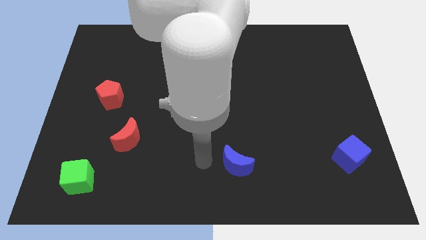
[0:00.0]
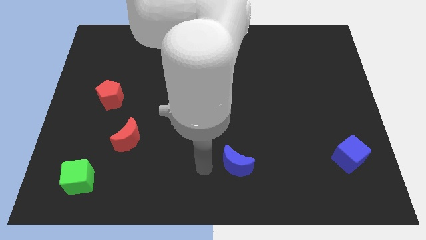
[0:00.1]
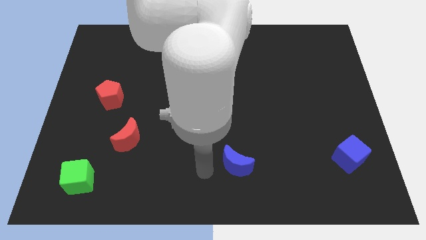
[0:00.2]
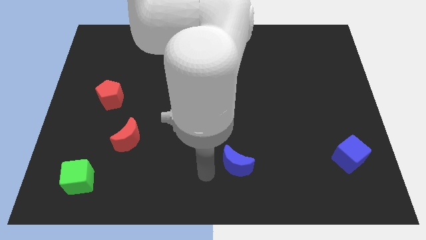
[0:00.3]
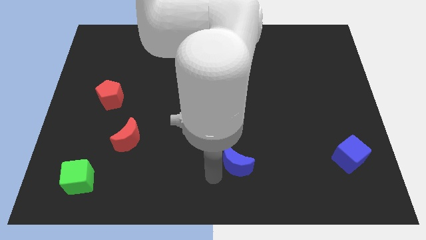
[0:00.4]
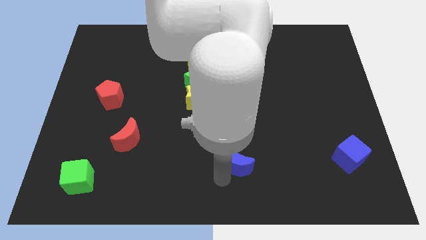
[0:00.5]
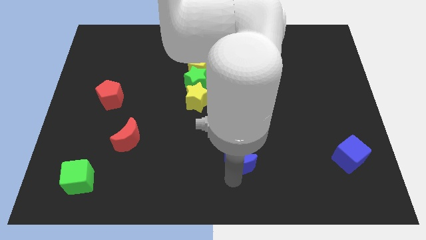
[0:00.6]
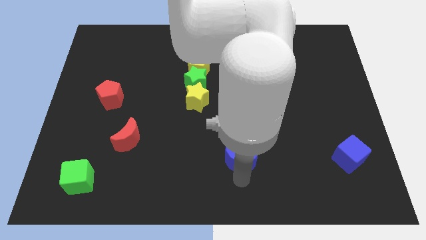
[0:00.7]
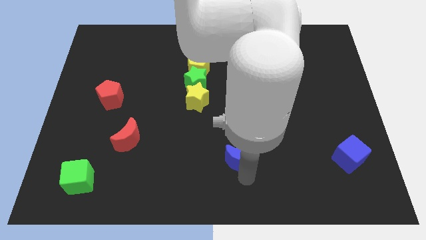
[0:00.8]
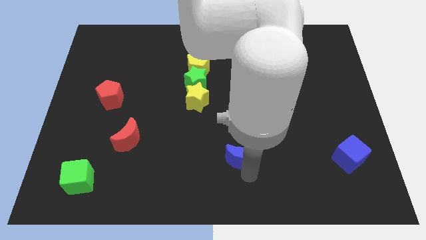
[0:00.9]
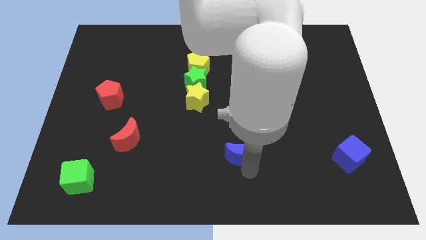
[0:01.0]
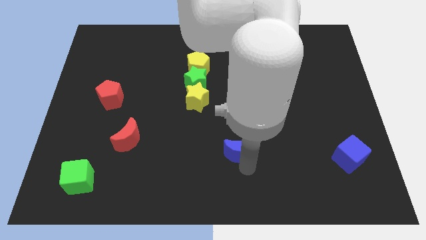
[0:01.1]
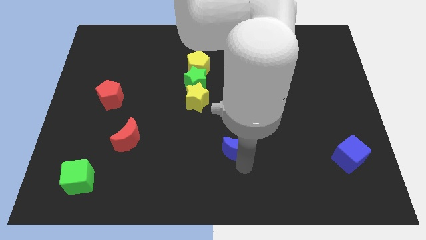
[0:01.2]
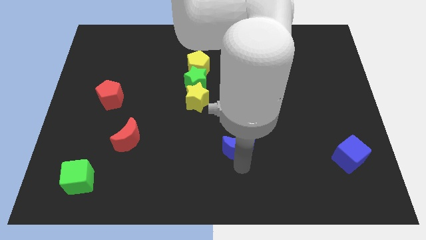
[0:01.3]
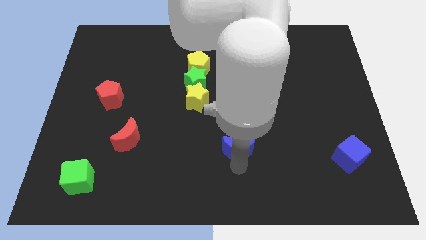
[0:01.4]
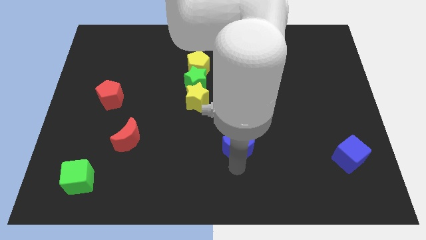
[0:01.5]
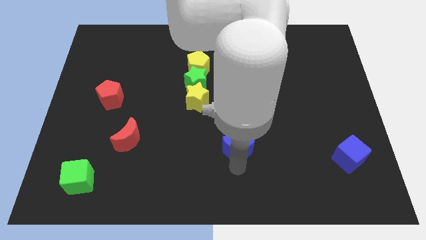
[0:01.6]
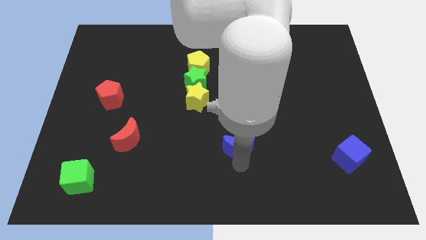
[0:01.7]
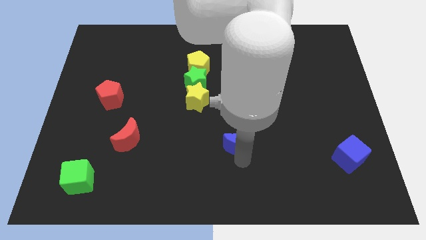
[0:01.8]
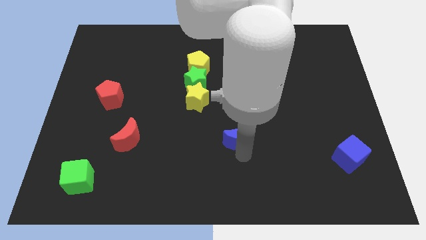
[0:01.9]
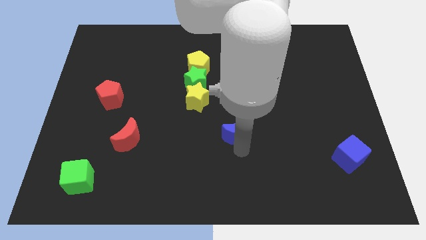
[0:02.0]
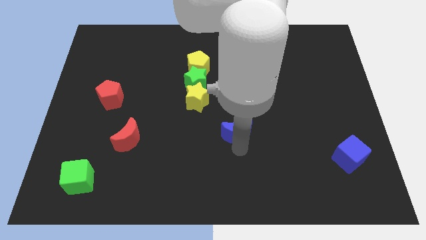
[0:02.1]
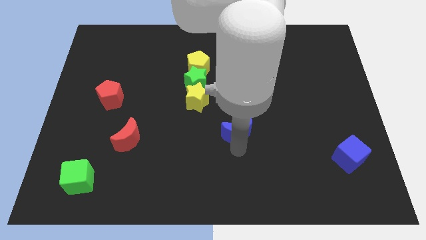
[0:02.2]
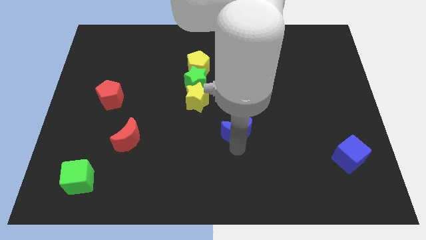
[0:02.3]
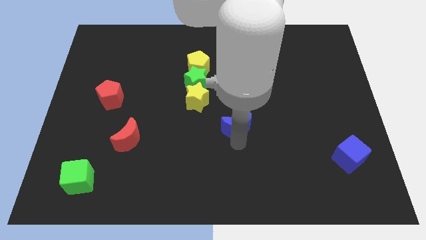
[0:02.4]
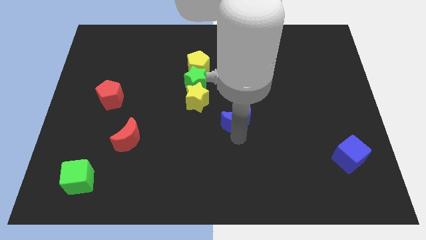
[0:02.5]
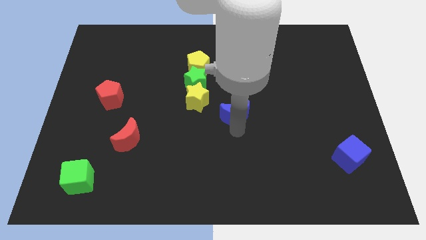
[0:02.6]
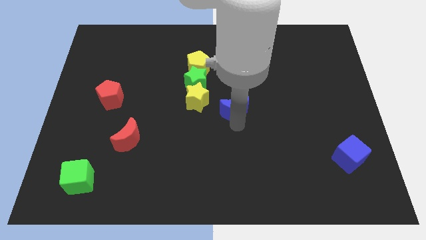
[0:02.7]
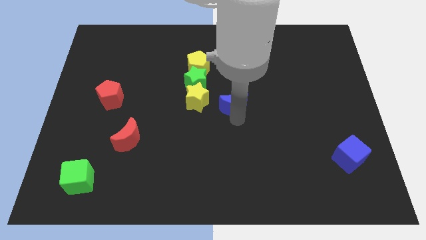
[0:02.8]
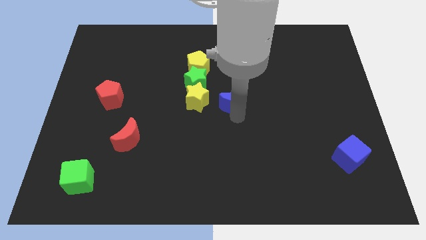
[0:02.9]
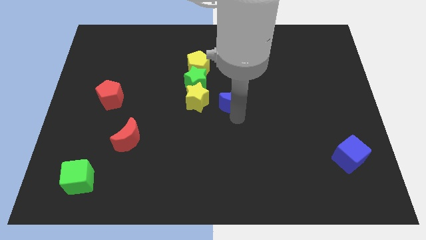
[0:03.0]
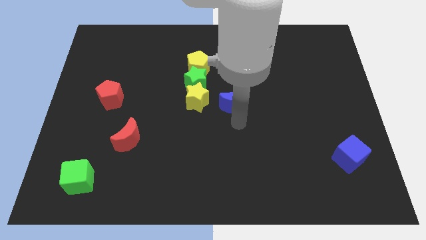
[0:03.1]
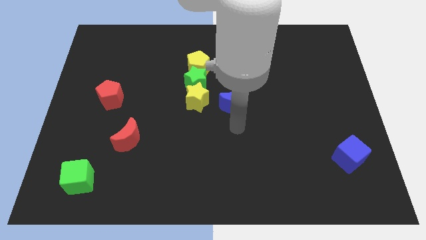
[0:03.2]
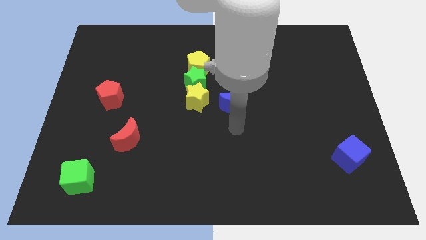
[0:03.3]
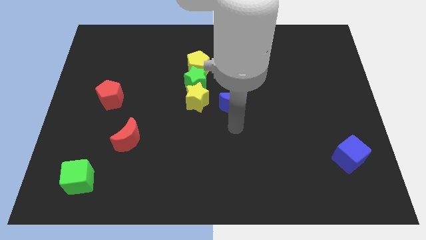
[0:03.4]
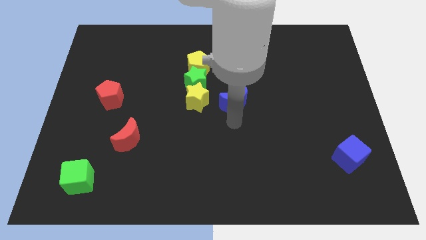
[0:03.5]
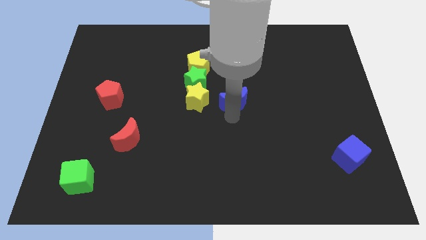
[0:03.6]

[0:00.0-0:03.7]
move the blue moon right side of the yellow star

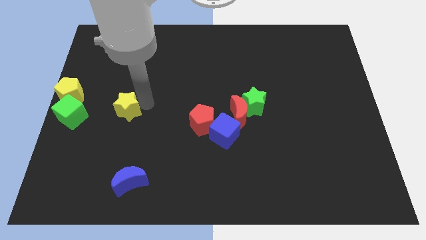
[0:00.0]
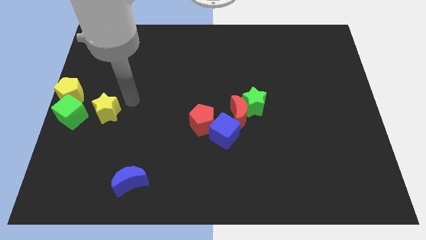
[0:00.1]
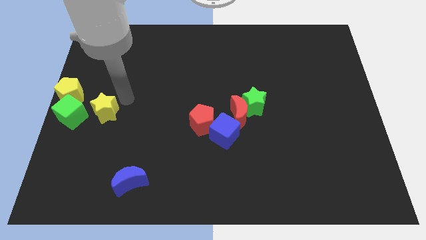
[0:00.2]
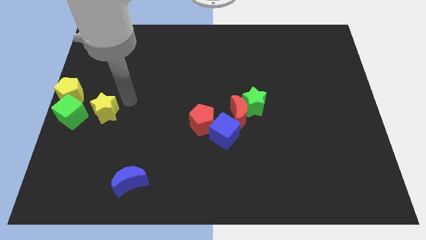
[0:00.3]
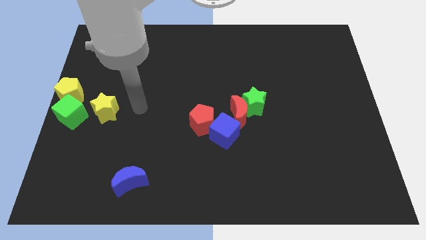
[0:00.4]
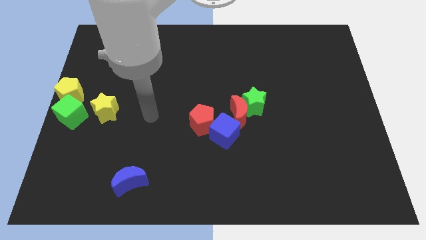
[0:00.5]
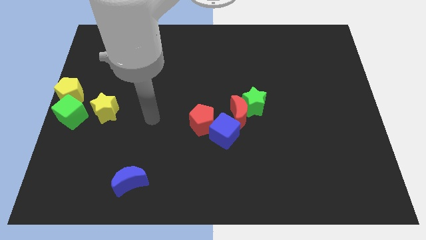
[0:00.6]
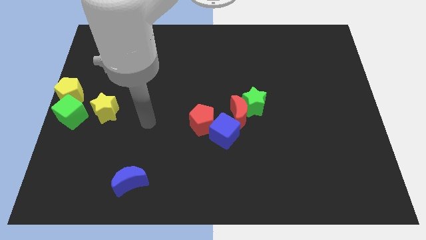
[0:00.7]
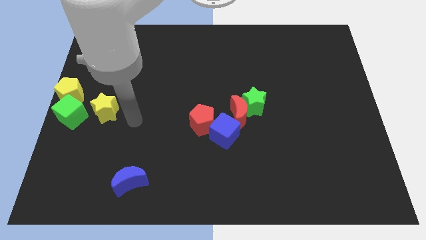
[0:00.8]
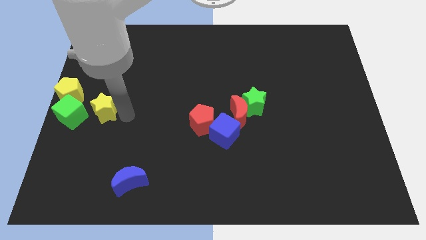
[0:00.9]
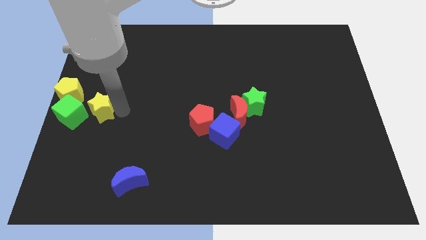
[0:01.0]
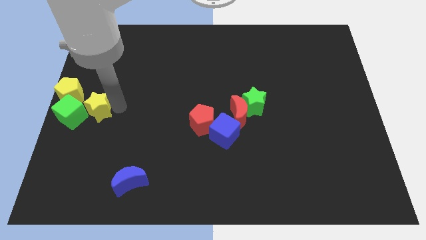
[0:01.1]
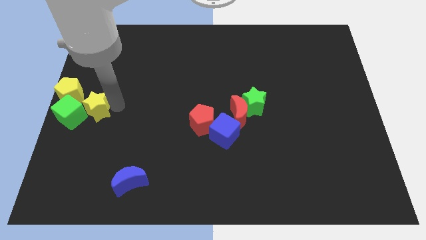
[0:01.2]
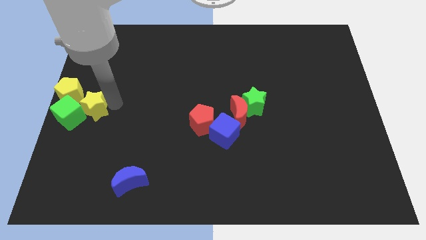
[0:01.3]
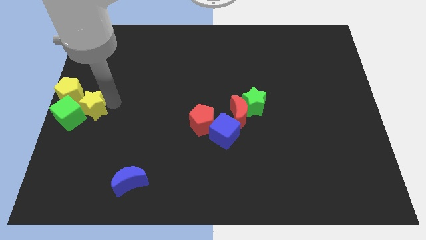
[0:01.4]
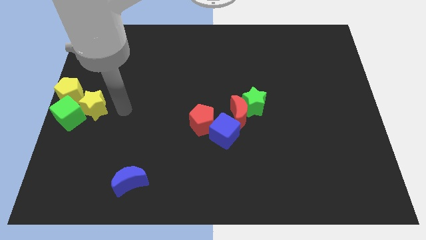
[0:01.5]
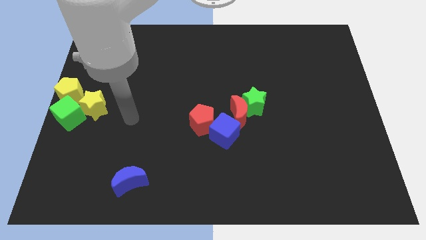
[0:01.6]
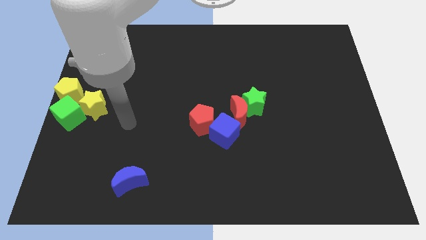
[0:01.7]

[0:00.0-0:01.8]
move the yellow star into the green cube and yellow pentagon

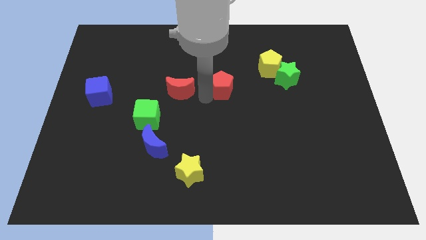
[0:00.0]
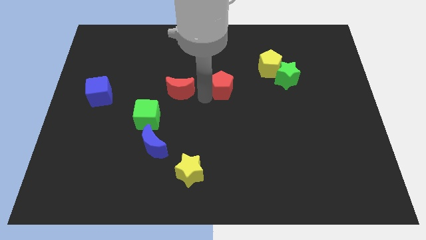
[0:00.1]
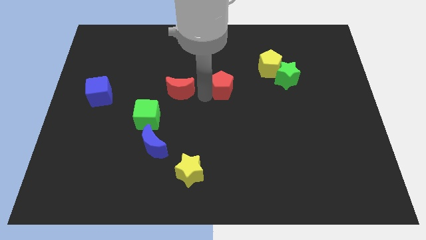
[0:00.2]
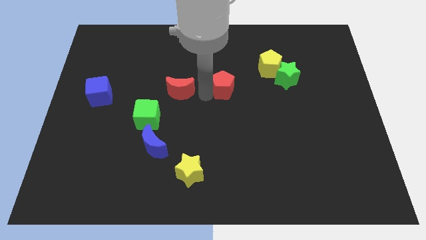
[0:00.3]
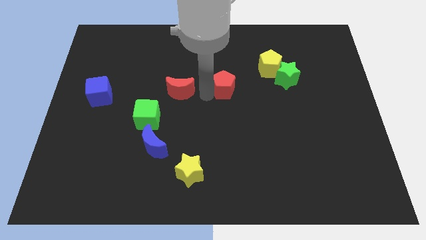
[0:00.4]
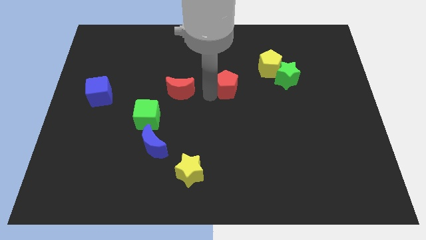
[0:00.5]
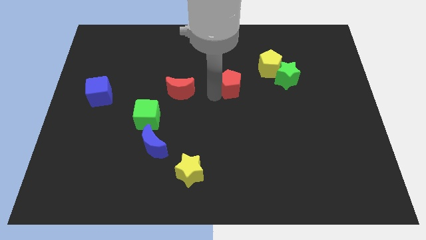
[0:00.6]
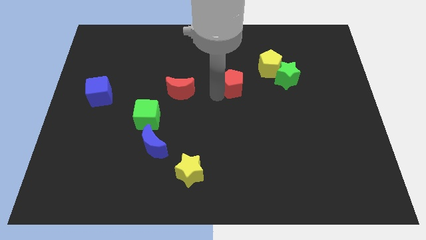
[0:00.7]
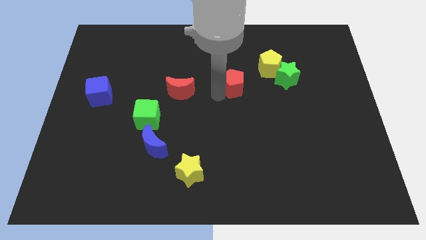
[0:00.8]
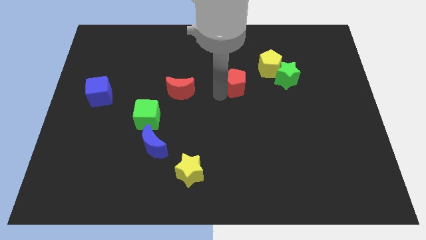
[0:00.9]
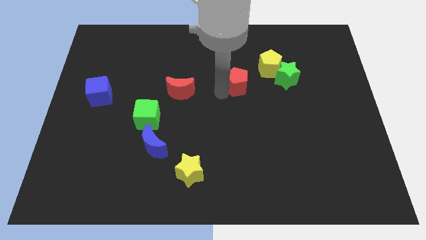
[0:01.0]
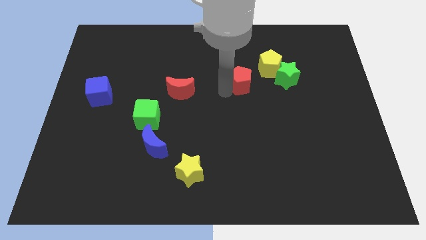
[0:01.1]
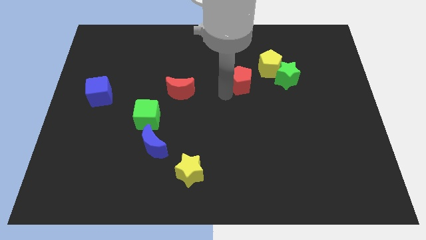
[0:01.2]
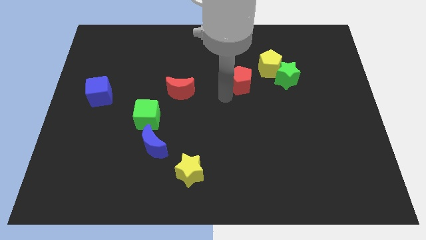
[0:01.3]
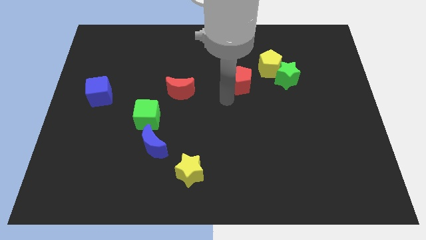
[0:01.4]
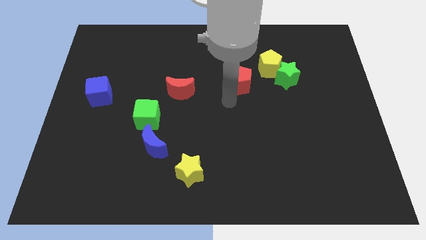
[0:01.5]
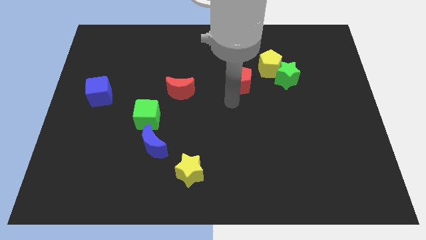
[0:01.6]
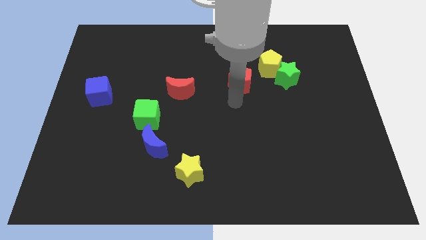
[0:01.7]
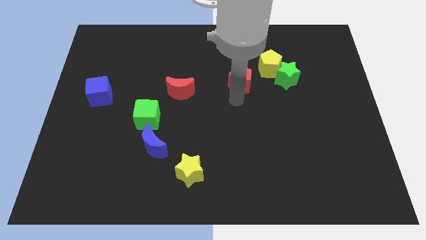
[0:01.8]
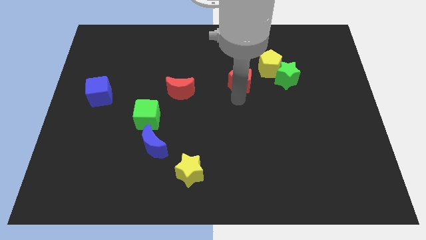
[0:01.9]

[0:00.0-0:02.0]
place red pentagon to the bottom left of yellow pentagon

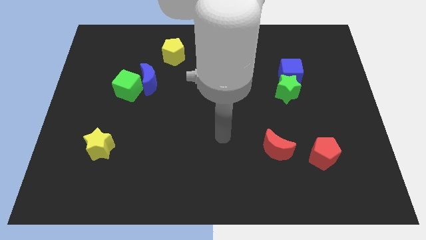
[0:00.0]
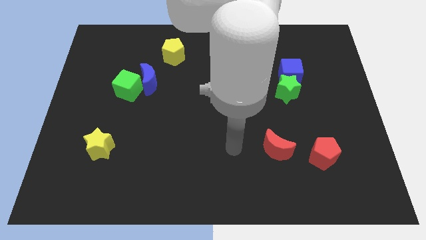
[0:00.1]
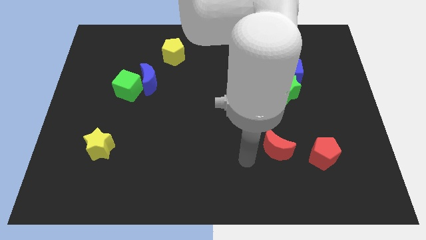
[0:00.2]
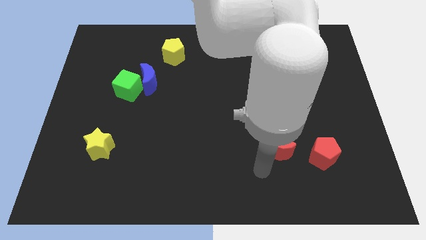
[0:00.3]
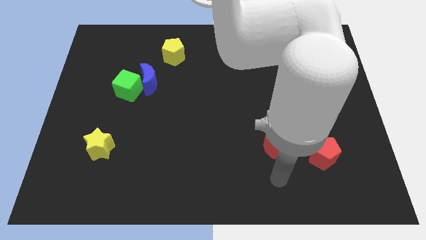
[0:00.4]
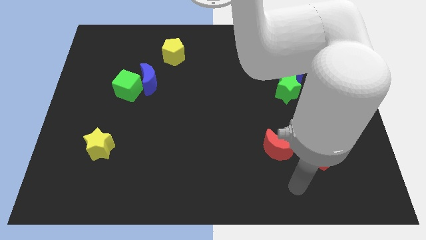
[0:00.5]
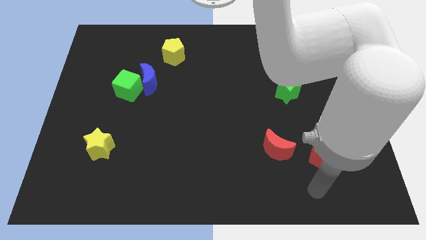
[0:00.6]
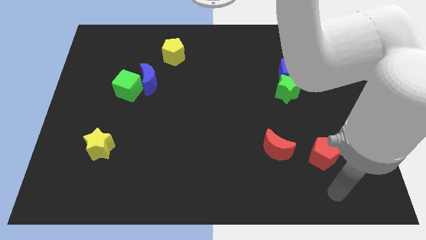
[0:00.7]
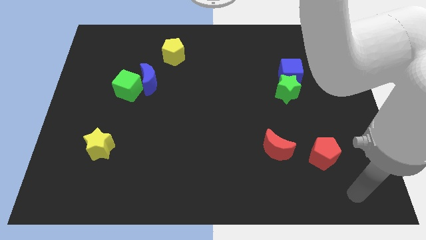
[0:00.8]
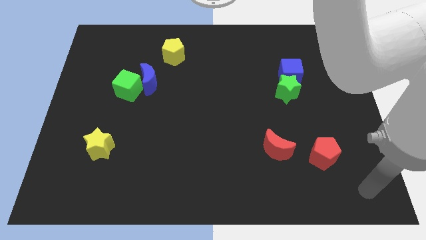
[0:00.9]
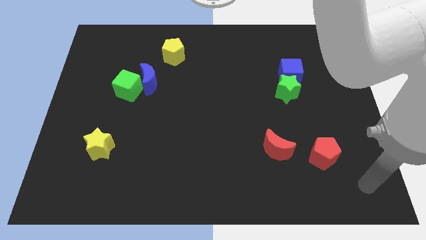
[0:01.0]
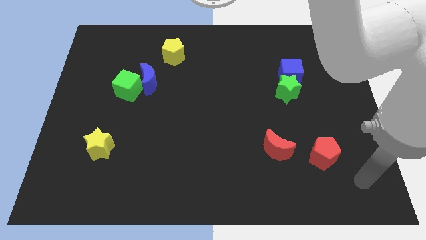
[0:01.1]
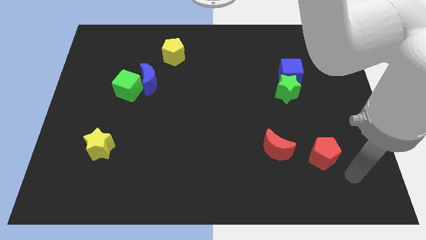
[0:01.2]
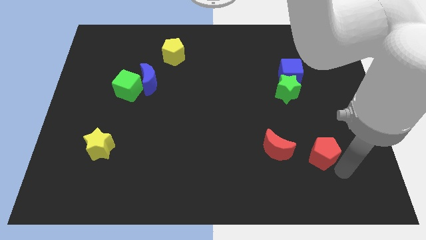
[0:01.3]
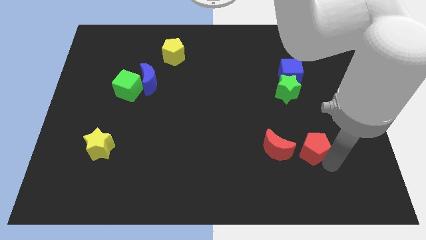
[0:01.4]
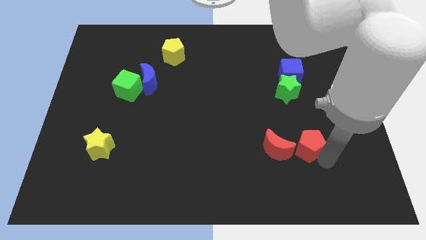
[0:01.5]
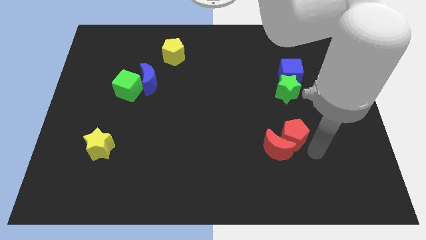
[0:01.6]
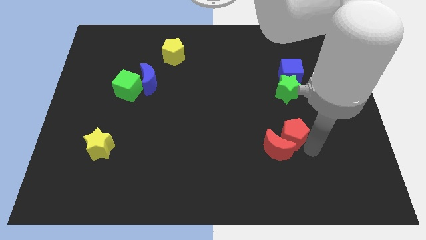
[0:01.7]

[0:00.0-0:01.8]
place the red pentagon above the red moon
